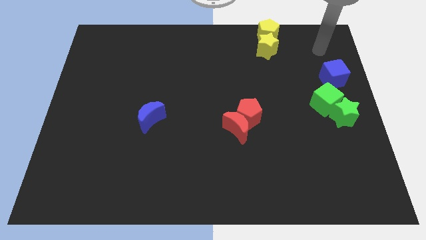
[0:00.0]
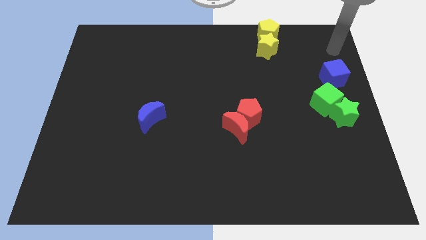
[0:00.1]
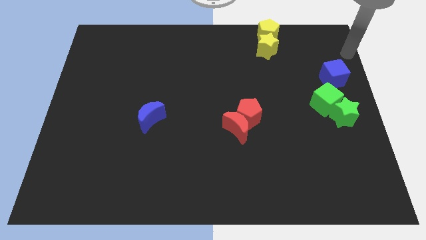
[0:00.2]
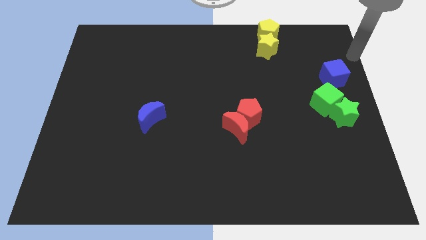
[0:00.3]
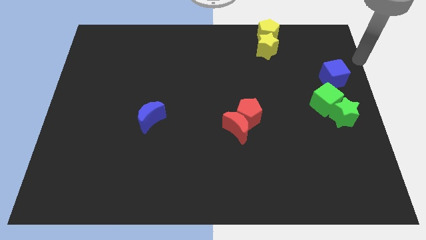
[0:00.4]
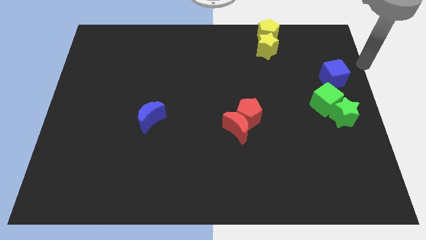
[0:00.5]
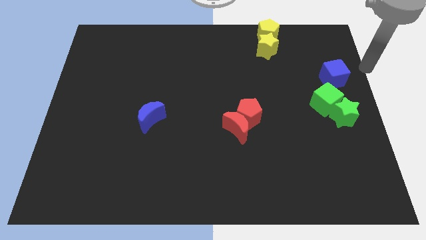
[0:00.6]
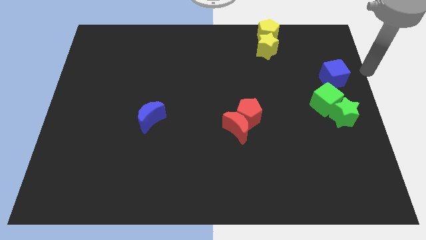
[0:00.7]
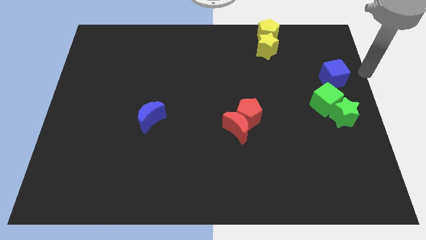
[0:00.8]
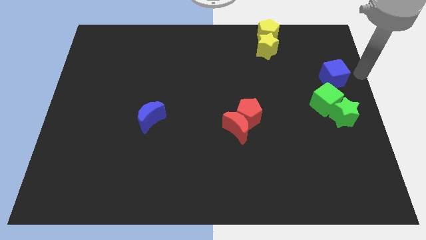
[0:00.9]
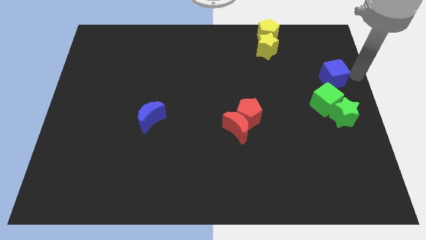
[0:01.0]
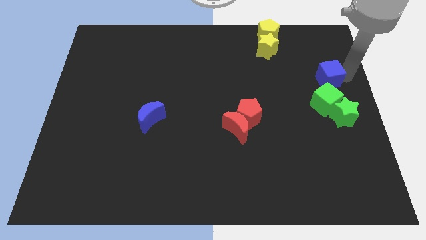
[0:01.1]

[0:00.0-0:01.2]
push the blue cube slightly to the left

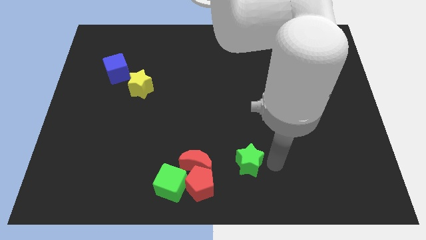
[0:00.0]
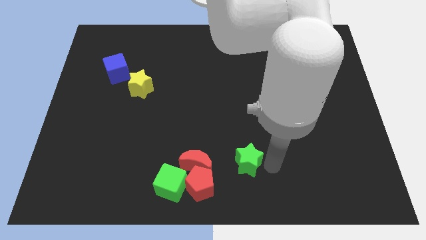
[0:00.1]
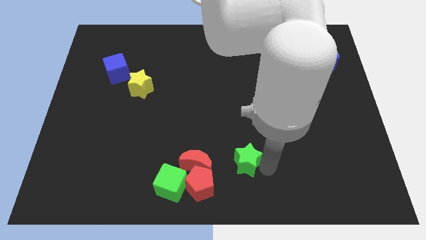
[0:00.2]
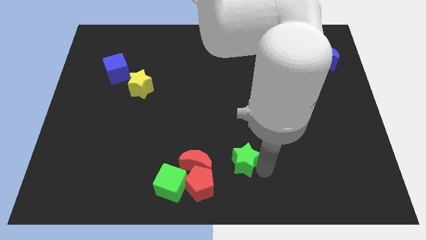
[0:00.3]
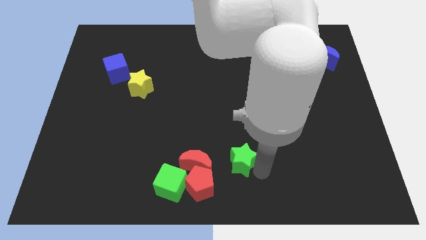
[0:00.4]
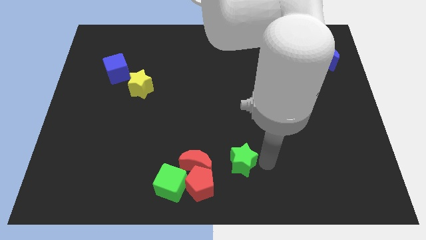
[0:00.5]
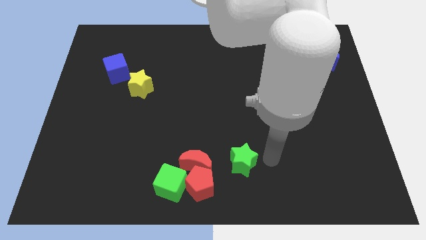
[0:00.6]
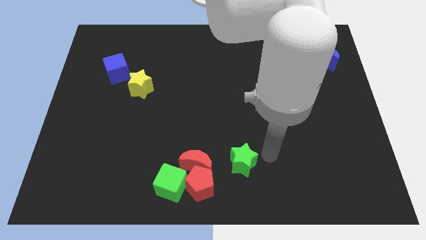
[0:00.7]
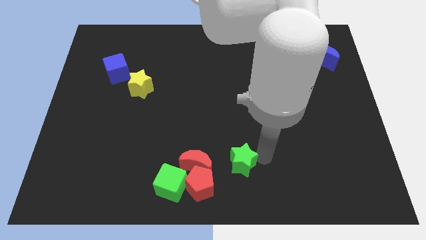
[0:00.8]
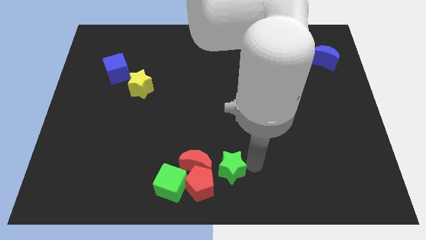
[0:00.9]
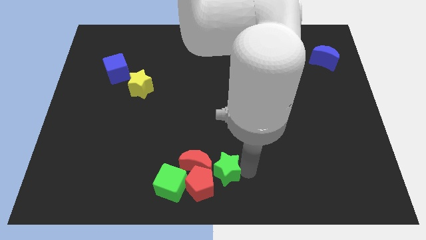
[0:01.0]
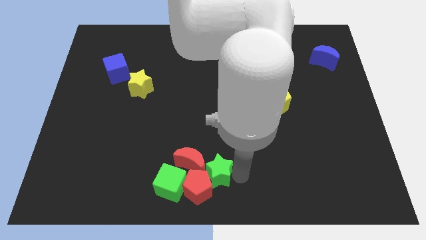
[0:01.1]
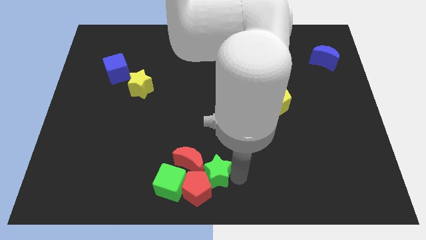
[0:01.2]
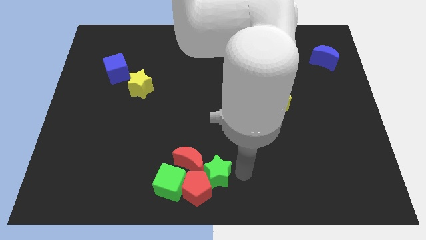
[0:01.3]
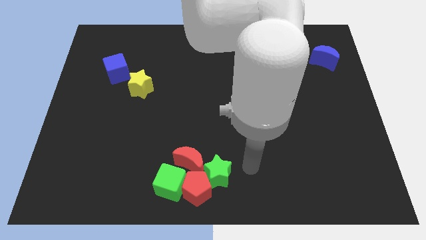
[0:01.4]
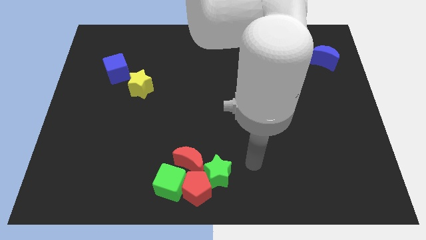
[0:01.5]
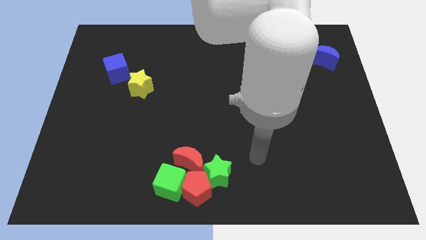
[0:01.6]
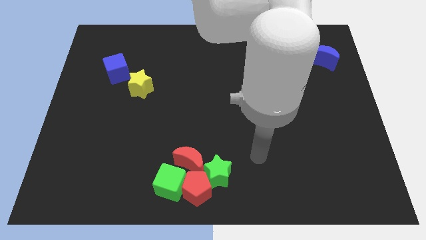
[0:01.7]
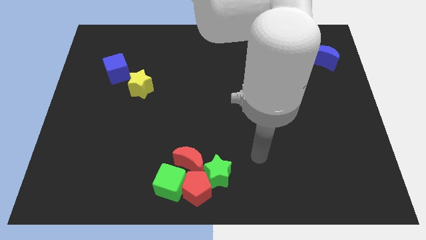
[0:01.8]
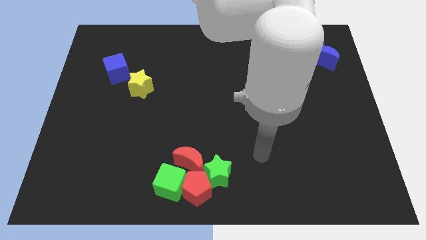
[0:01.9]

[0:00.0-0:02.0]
move the green star into the group of blocks

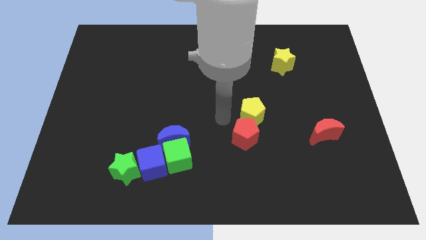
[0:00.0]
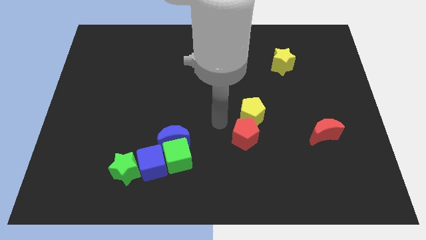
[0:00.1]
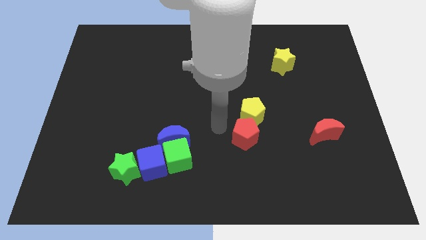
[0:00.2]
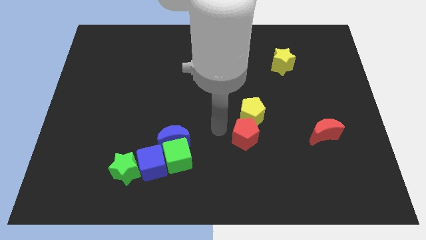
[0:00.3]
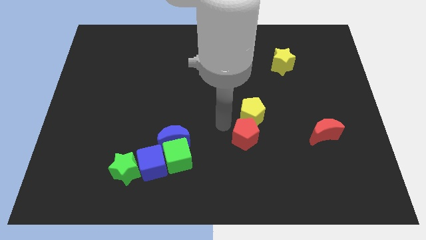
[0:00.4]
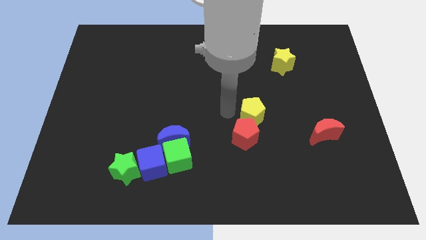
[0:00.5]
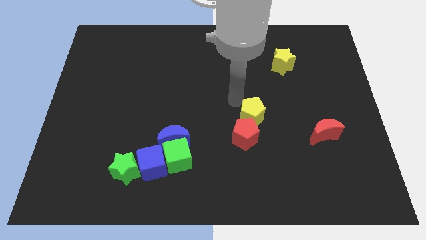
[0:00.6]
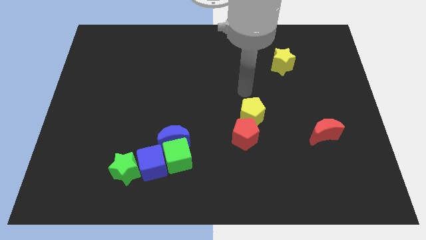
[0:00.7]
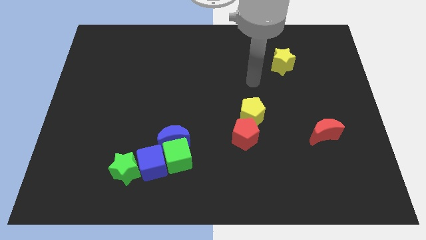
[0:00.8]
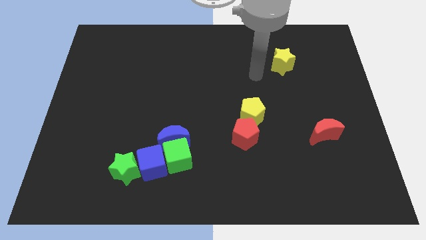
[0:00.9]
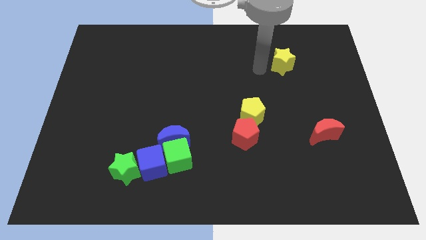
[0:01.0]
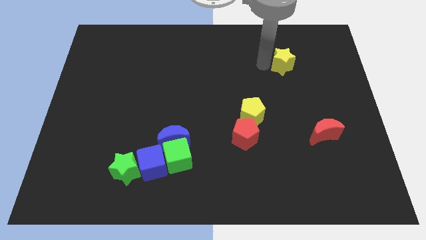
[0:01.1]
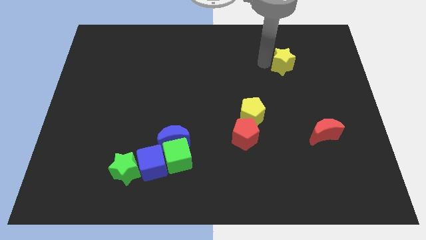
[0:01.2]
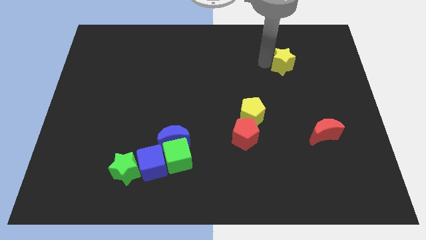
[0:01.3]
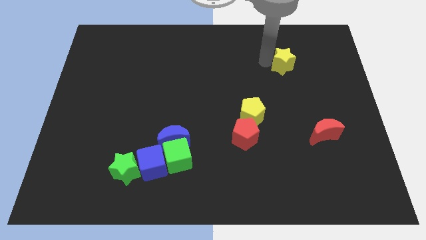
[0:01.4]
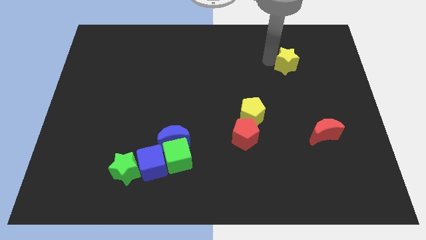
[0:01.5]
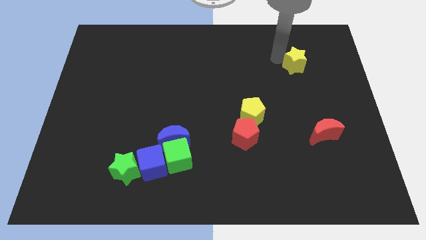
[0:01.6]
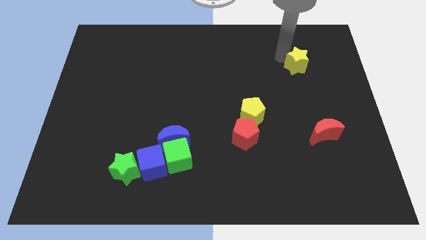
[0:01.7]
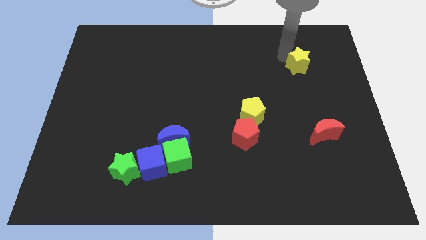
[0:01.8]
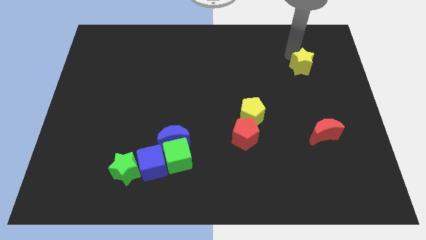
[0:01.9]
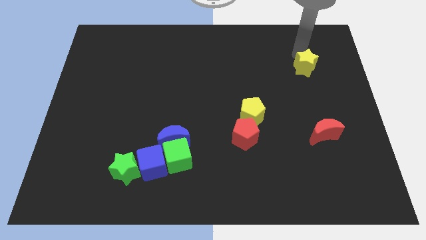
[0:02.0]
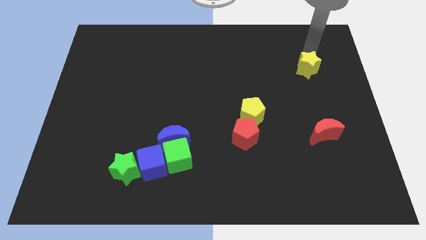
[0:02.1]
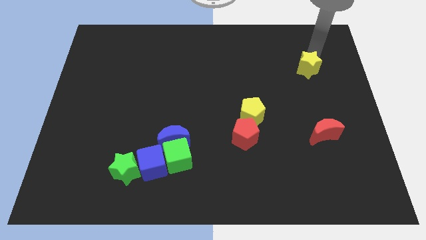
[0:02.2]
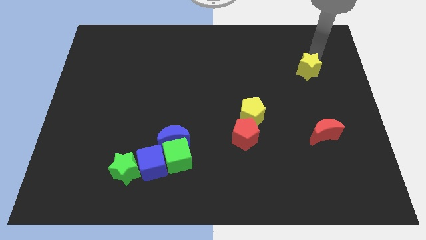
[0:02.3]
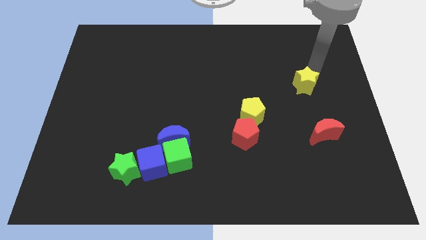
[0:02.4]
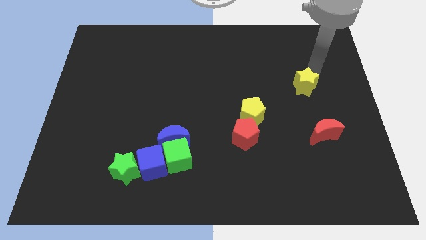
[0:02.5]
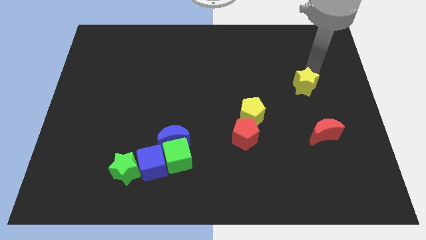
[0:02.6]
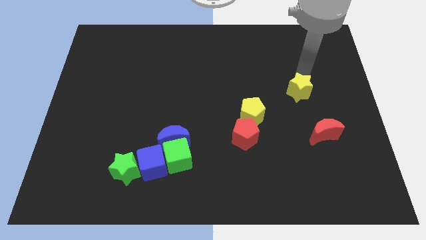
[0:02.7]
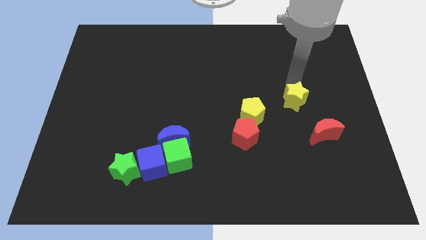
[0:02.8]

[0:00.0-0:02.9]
place the yellow star diagonally to yellow pentagon

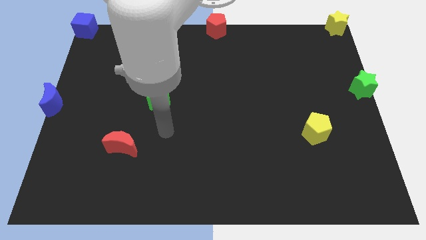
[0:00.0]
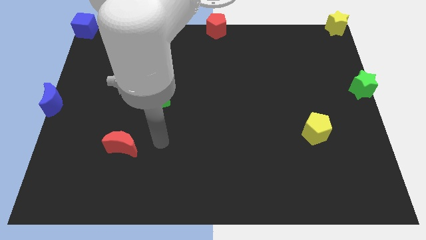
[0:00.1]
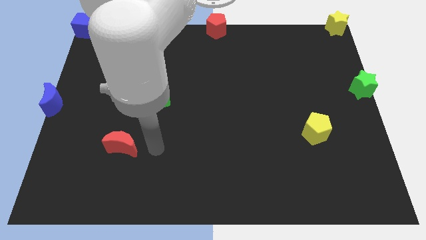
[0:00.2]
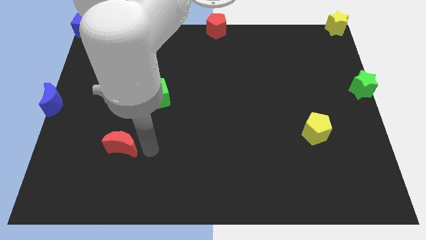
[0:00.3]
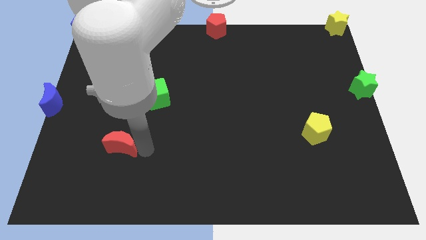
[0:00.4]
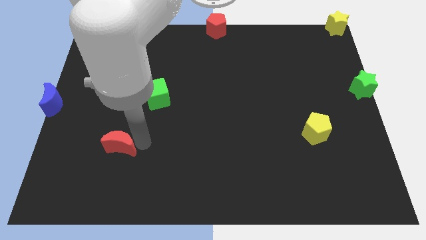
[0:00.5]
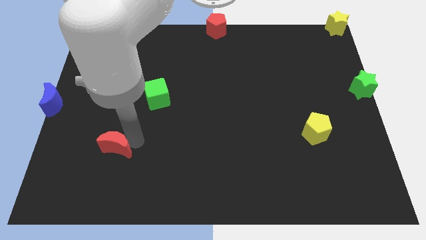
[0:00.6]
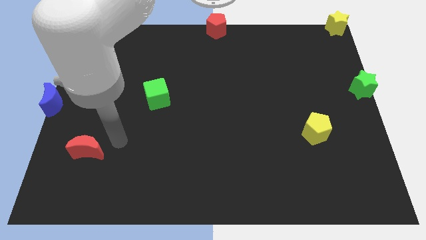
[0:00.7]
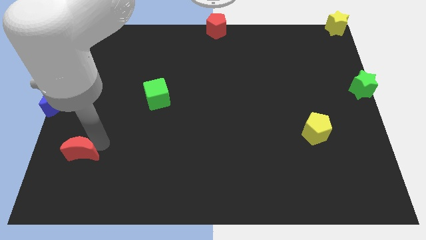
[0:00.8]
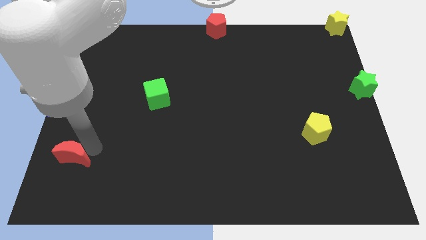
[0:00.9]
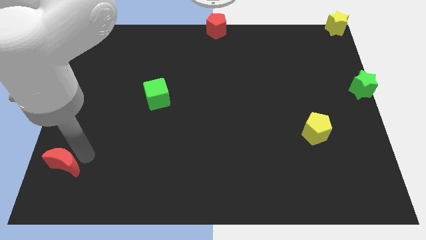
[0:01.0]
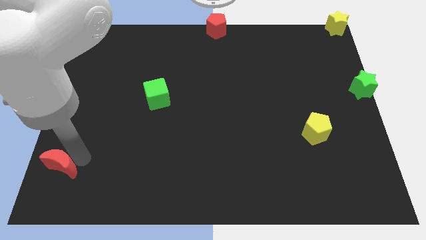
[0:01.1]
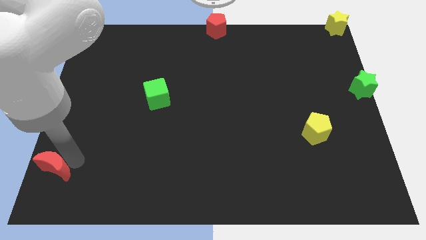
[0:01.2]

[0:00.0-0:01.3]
place the red moon diagonal to the green cube

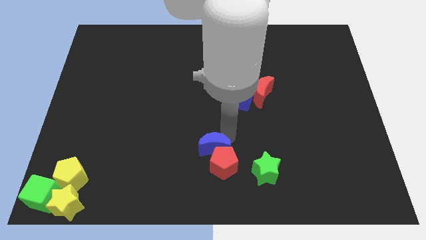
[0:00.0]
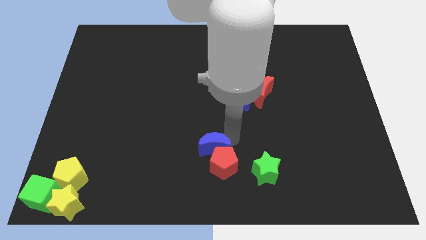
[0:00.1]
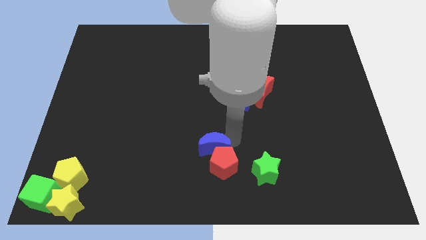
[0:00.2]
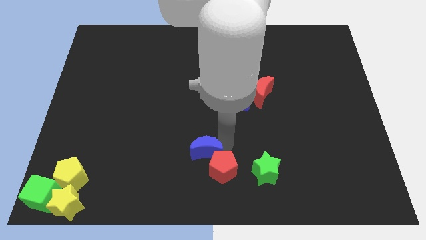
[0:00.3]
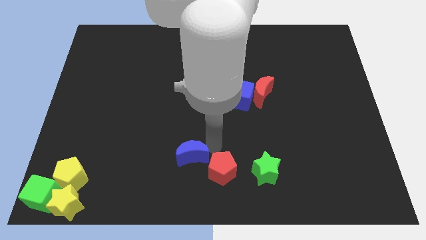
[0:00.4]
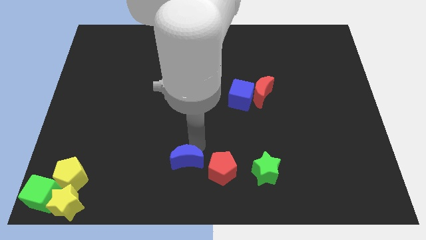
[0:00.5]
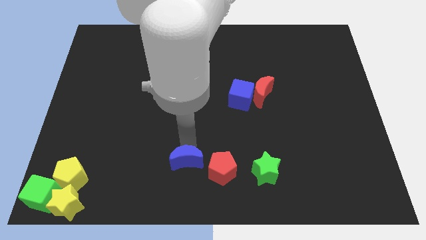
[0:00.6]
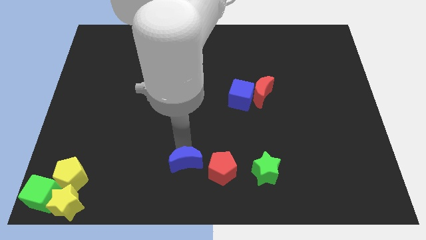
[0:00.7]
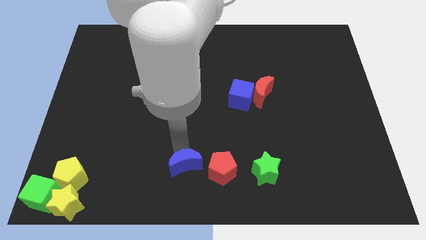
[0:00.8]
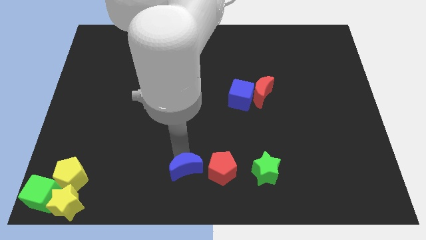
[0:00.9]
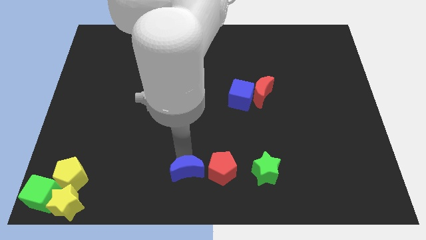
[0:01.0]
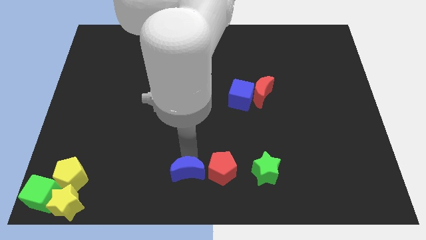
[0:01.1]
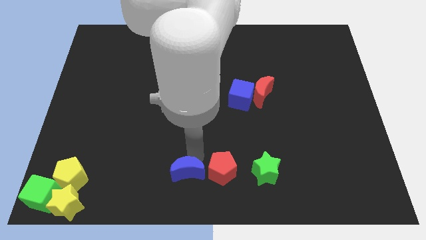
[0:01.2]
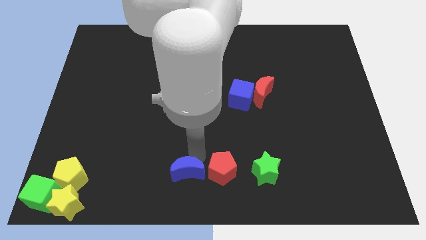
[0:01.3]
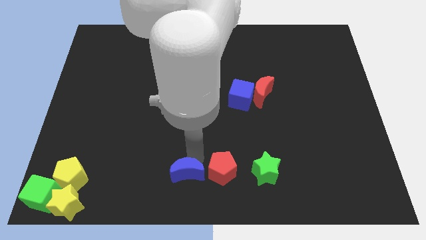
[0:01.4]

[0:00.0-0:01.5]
move the blue crescent to the left side of the red pentagon

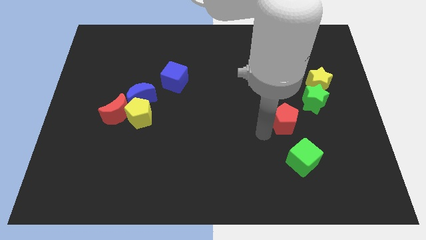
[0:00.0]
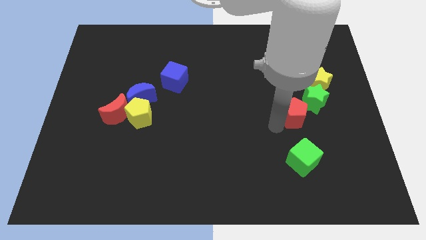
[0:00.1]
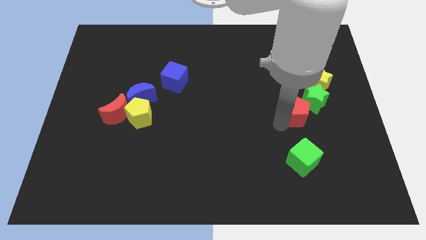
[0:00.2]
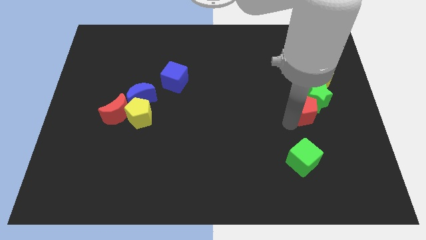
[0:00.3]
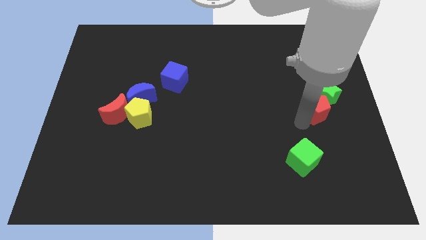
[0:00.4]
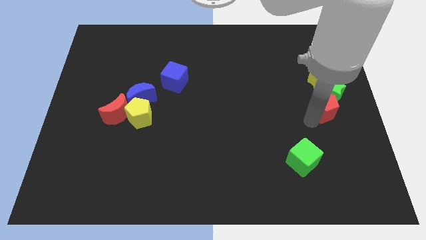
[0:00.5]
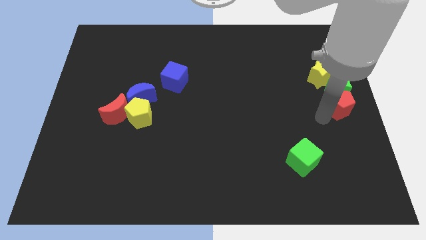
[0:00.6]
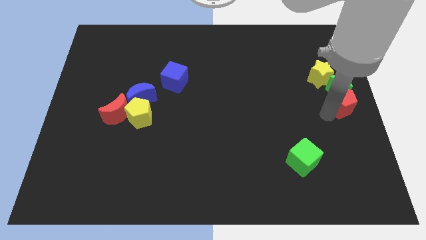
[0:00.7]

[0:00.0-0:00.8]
push red pentagon below green star
